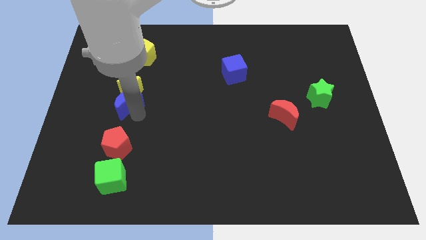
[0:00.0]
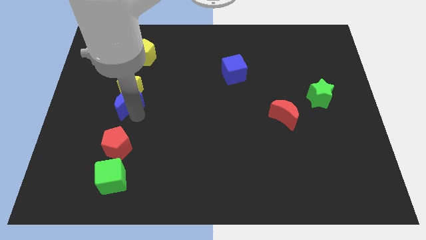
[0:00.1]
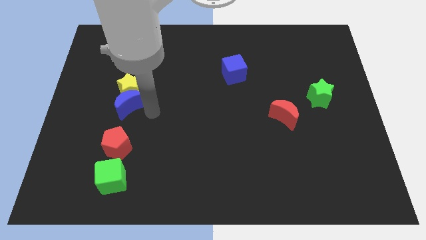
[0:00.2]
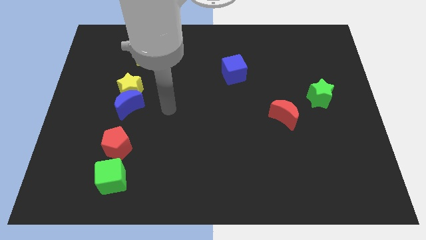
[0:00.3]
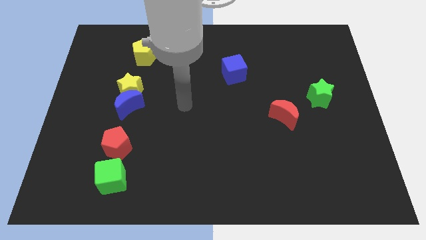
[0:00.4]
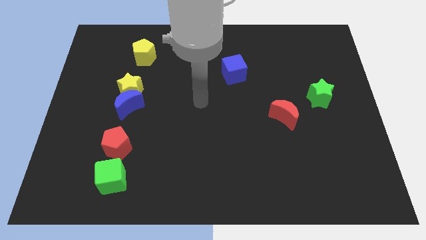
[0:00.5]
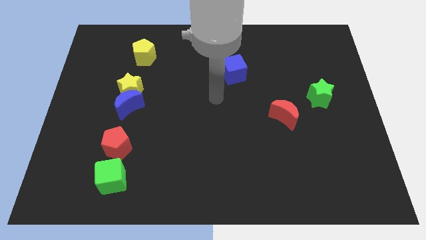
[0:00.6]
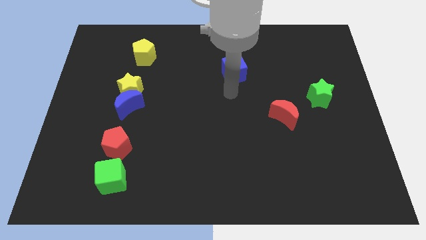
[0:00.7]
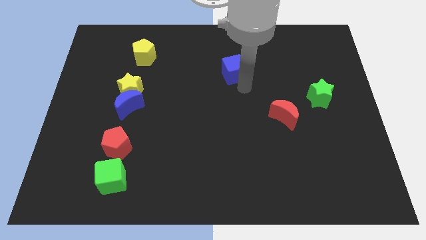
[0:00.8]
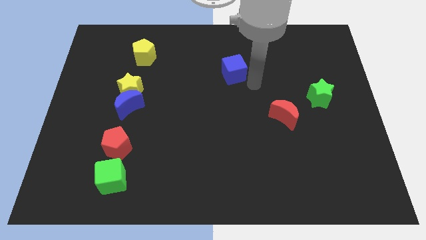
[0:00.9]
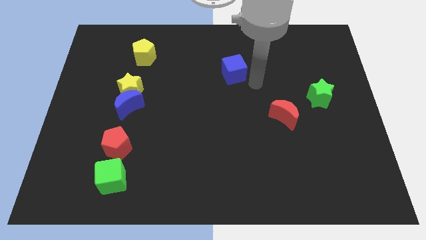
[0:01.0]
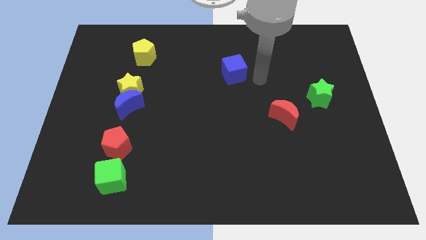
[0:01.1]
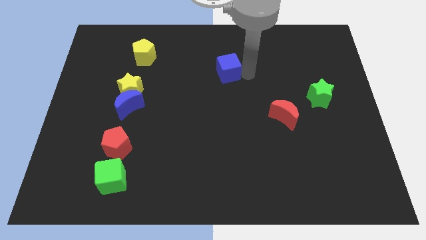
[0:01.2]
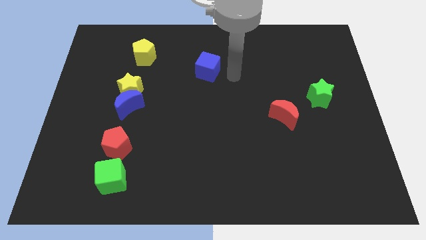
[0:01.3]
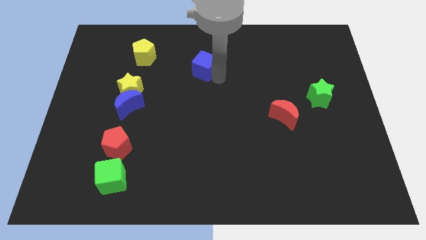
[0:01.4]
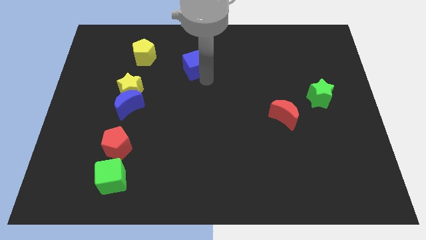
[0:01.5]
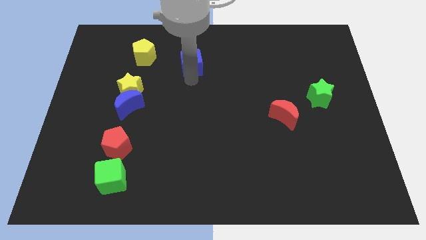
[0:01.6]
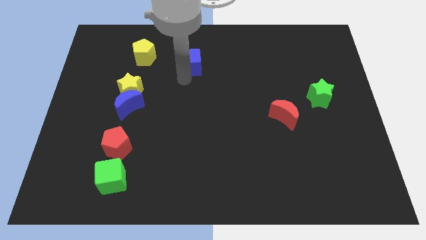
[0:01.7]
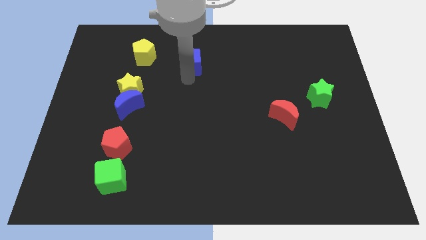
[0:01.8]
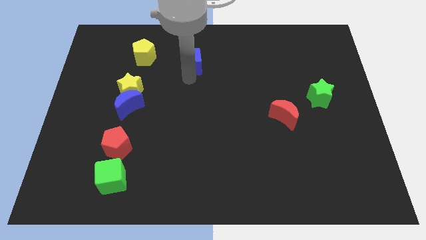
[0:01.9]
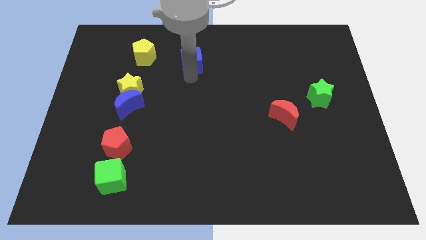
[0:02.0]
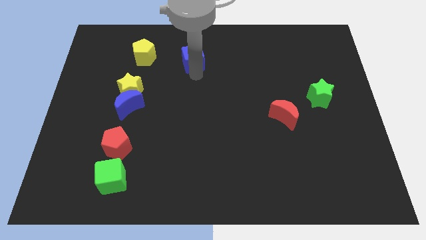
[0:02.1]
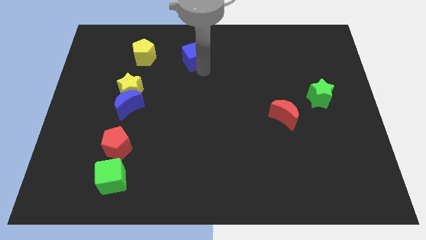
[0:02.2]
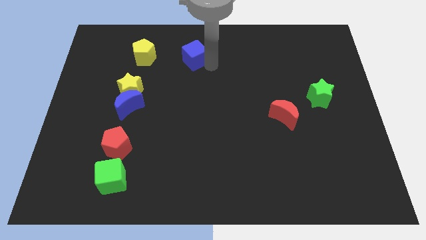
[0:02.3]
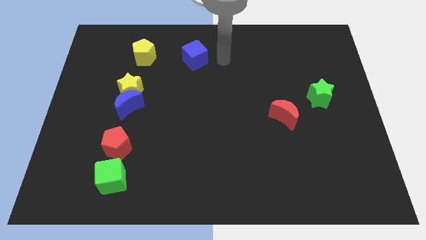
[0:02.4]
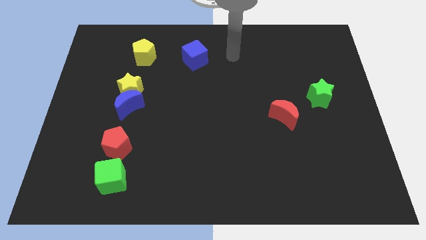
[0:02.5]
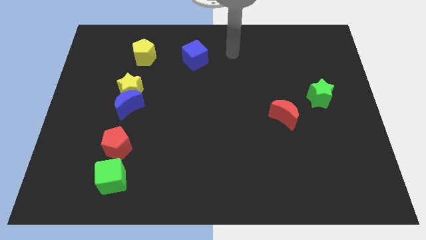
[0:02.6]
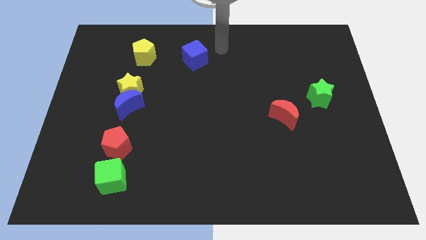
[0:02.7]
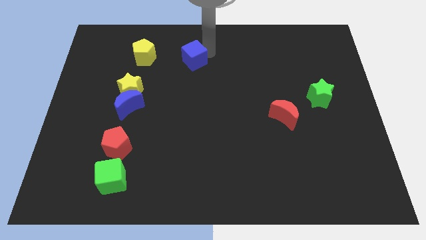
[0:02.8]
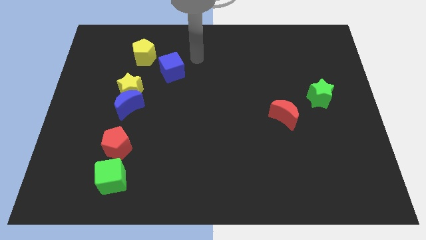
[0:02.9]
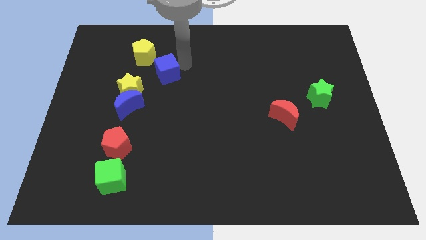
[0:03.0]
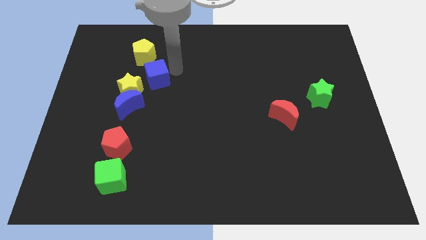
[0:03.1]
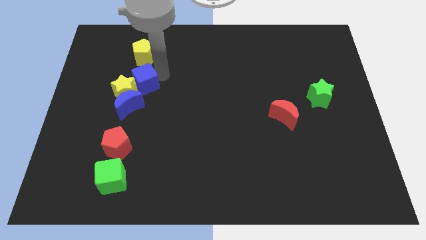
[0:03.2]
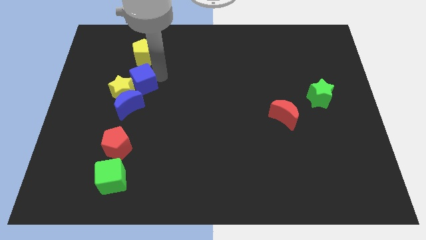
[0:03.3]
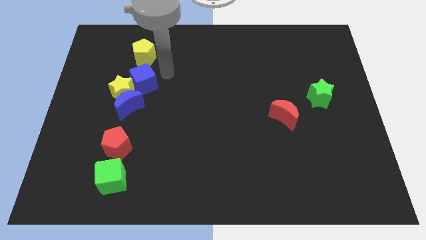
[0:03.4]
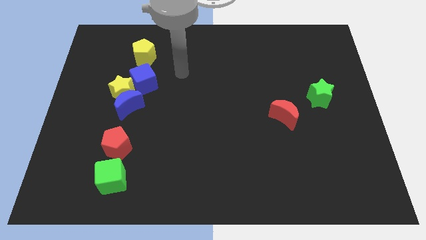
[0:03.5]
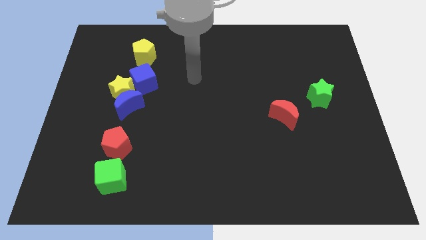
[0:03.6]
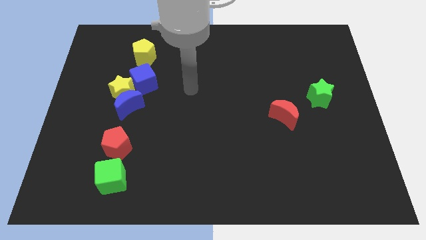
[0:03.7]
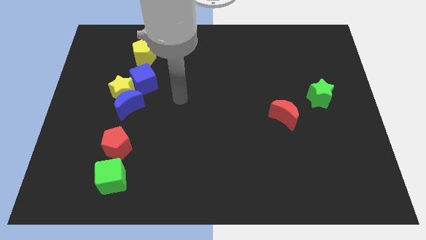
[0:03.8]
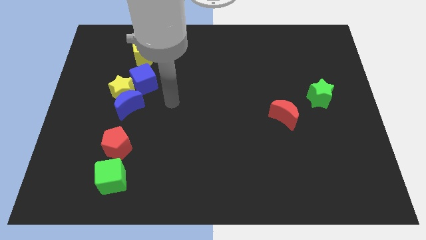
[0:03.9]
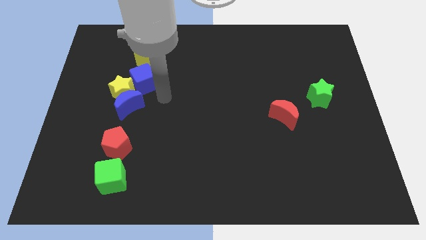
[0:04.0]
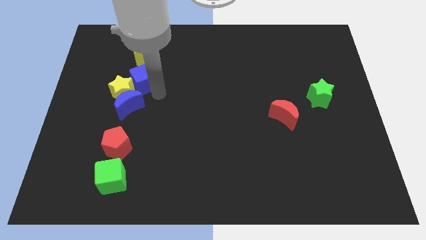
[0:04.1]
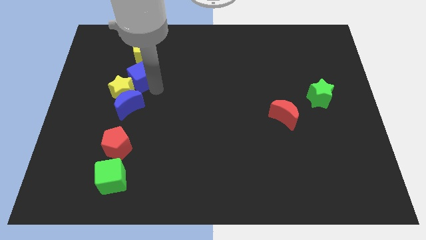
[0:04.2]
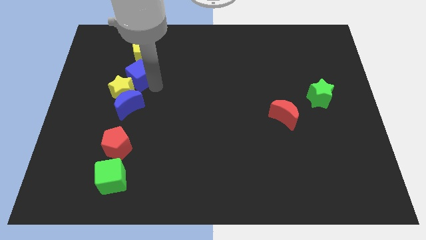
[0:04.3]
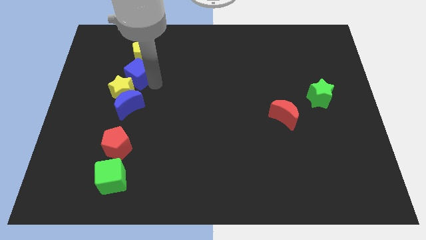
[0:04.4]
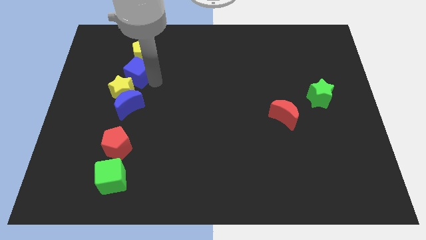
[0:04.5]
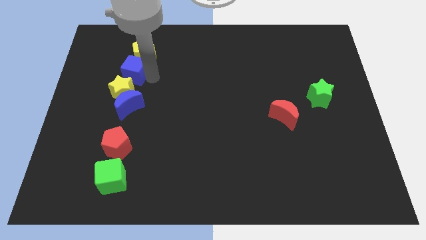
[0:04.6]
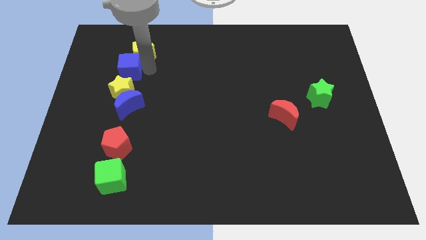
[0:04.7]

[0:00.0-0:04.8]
move the blue cube to the bottom of the yellow pentagon

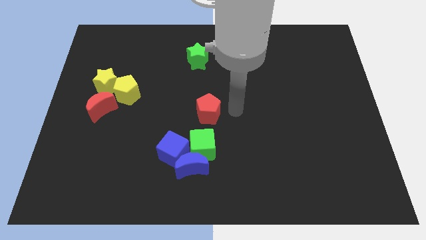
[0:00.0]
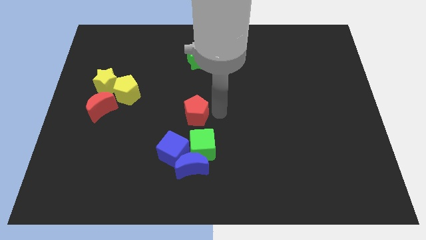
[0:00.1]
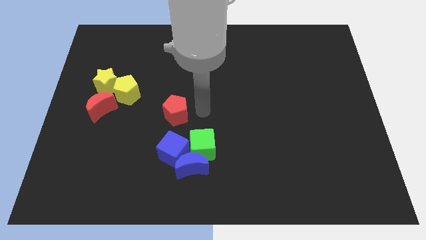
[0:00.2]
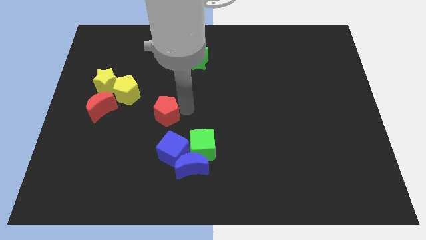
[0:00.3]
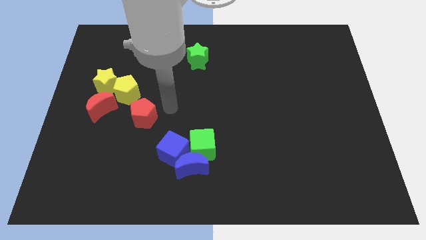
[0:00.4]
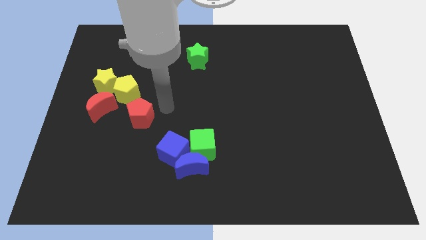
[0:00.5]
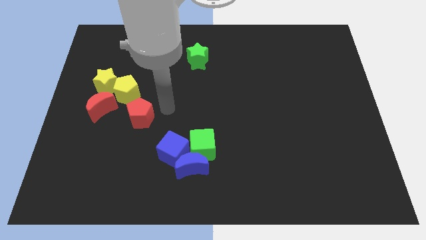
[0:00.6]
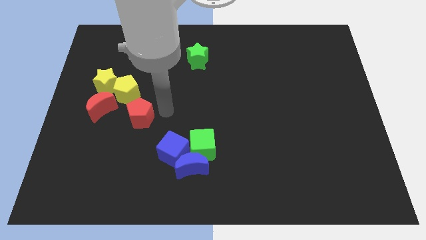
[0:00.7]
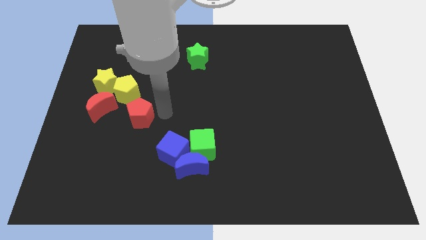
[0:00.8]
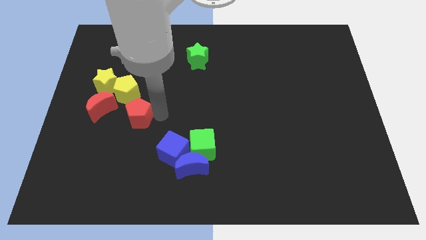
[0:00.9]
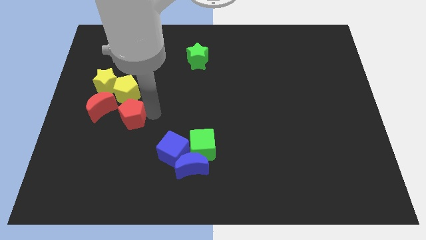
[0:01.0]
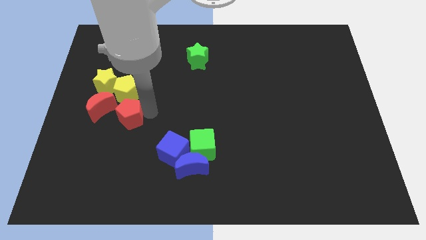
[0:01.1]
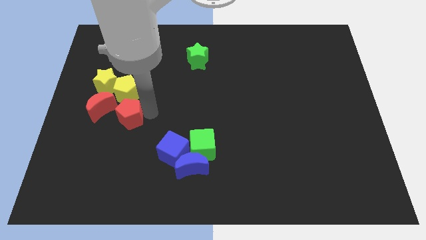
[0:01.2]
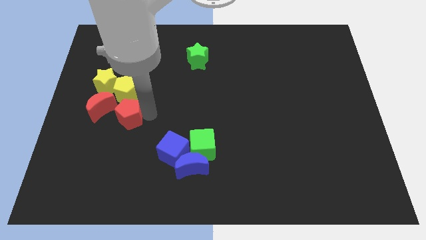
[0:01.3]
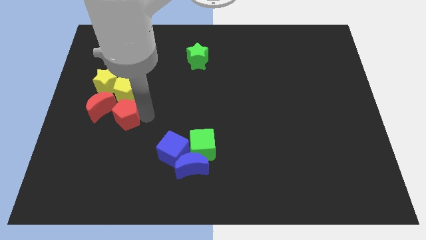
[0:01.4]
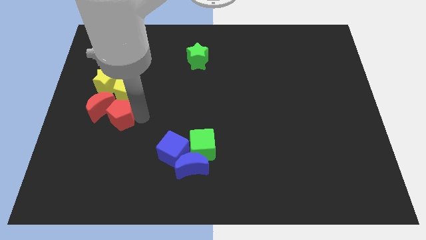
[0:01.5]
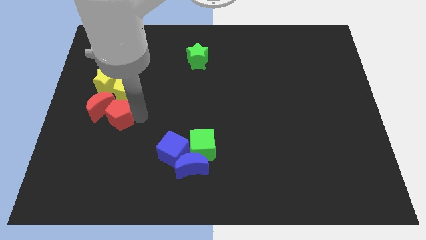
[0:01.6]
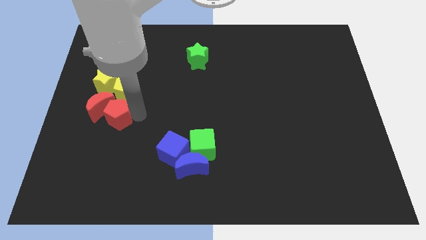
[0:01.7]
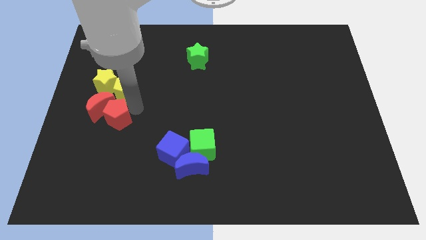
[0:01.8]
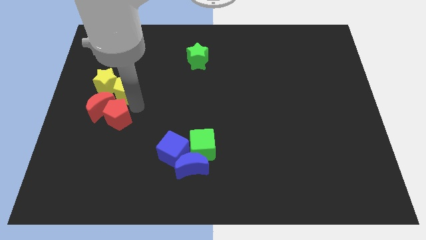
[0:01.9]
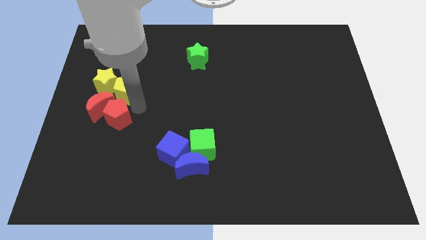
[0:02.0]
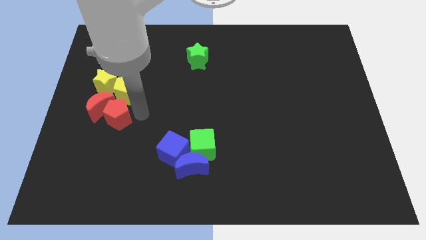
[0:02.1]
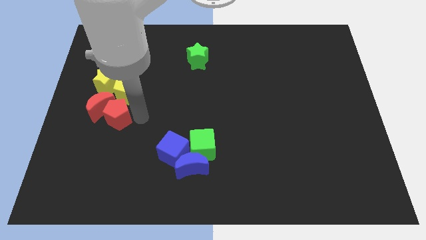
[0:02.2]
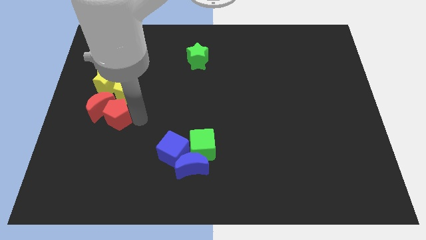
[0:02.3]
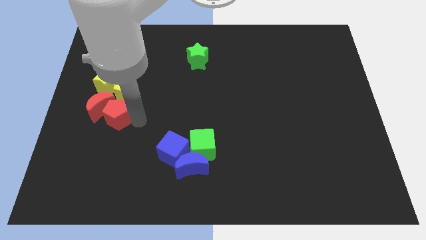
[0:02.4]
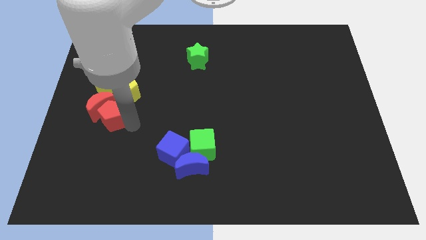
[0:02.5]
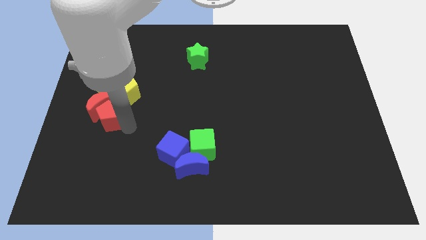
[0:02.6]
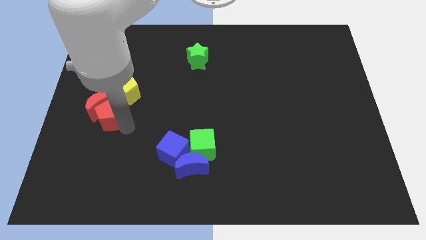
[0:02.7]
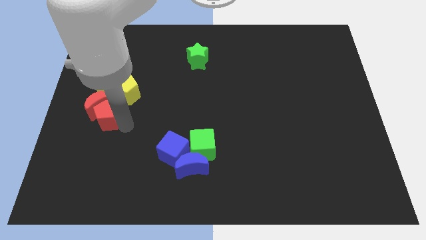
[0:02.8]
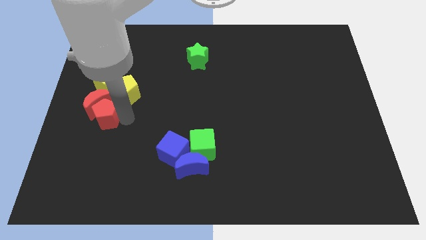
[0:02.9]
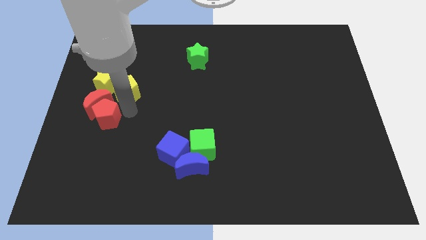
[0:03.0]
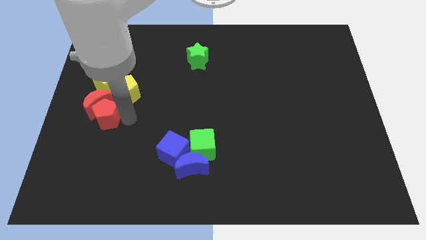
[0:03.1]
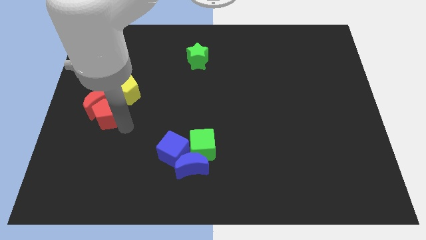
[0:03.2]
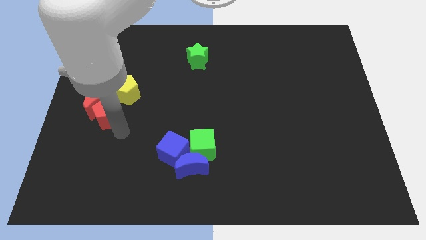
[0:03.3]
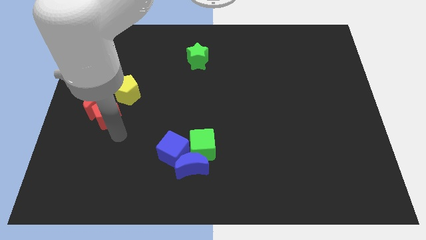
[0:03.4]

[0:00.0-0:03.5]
place the red blocks under the yellow blocks

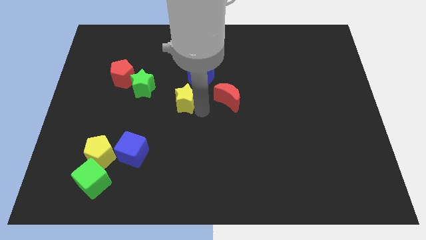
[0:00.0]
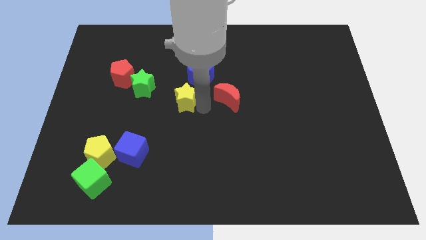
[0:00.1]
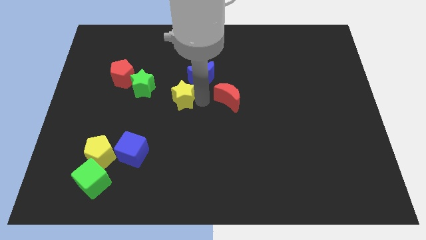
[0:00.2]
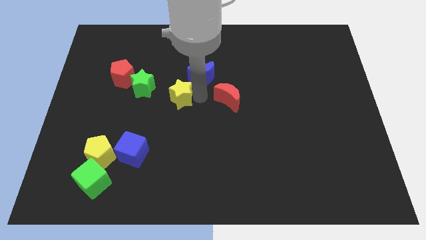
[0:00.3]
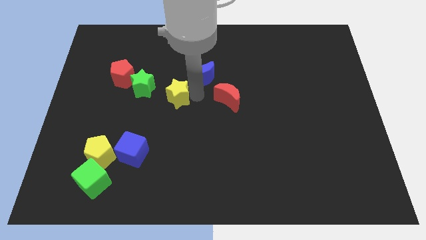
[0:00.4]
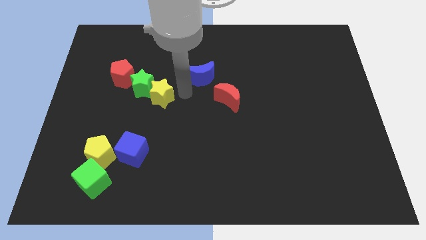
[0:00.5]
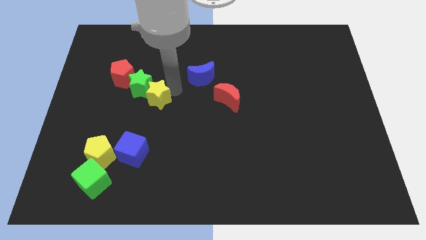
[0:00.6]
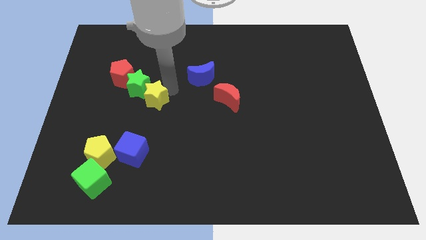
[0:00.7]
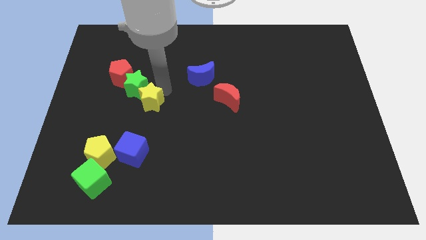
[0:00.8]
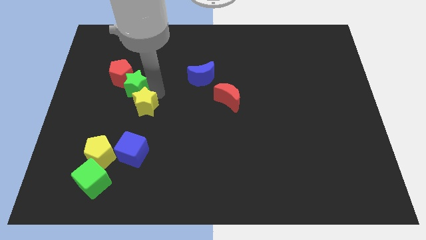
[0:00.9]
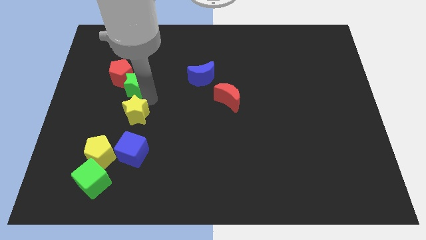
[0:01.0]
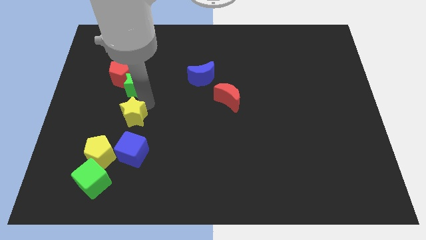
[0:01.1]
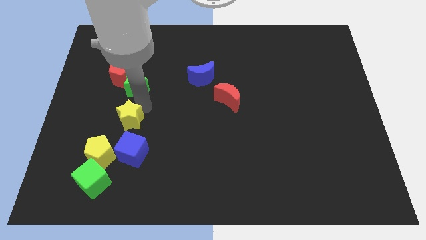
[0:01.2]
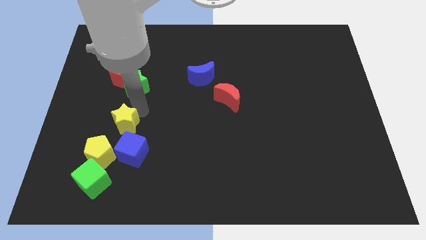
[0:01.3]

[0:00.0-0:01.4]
place the yellow star vertically below the green star
